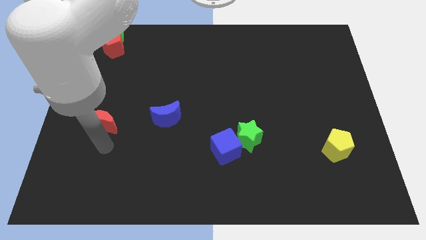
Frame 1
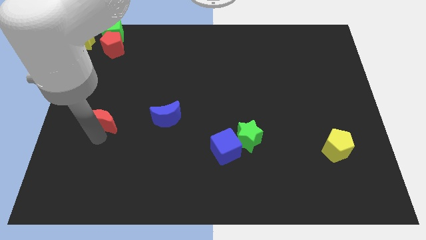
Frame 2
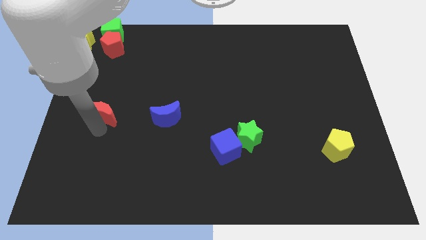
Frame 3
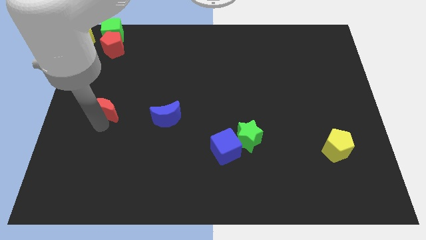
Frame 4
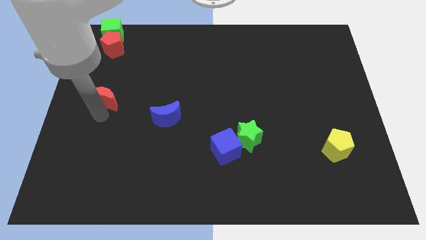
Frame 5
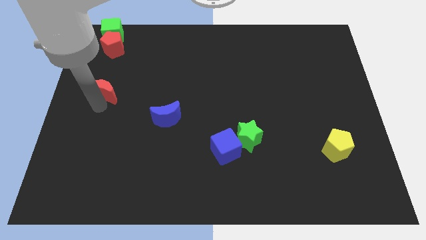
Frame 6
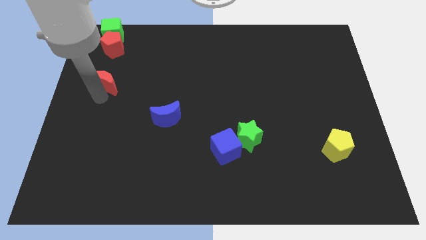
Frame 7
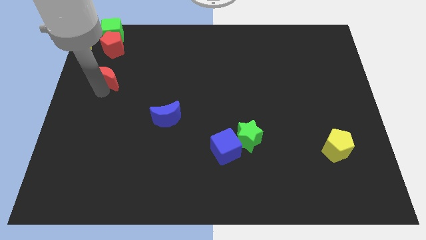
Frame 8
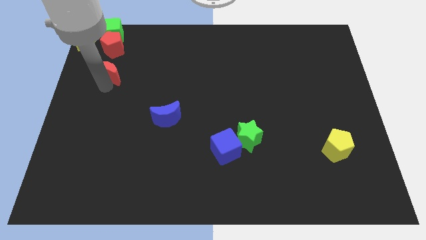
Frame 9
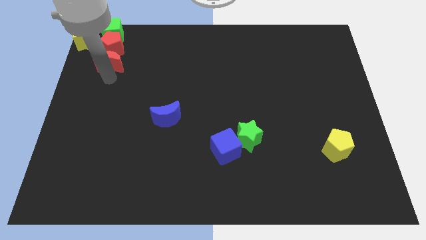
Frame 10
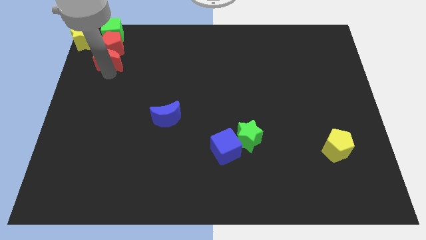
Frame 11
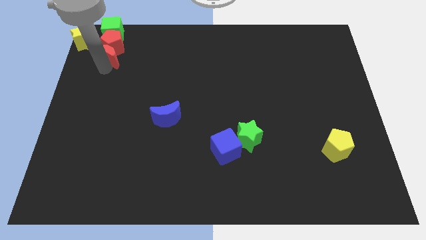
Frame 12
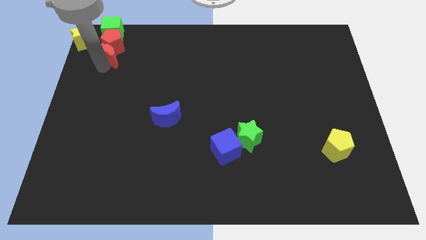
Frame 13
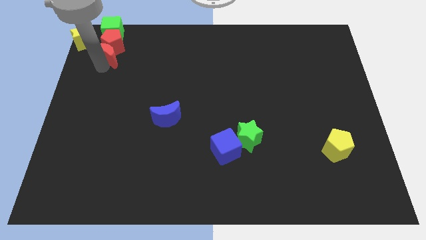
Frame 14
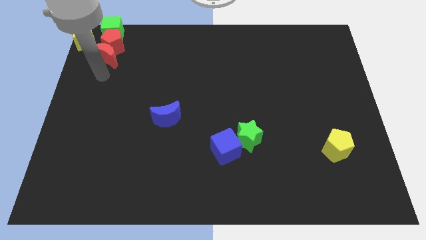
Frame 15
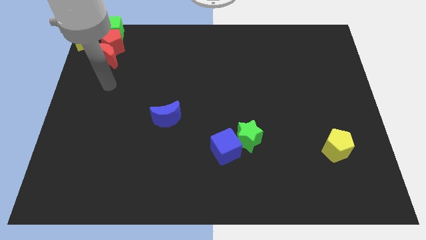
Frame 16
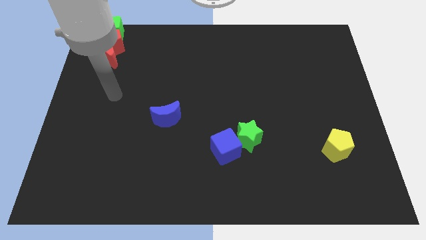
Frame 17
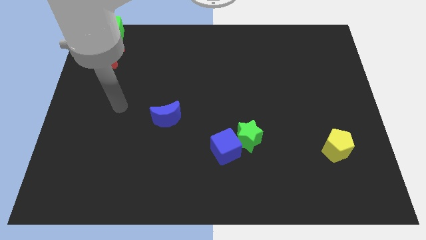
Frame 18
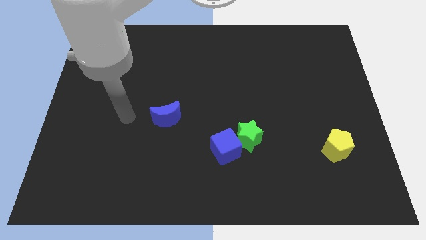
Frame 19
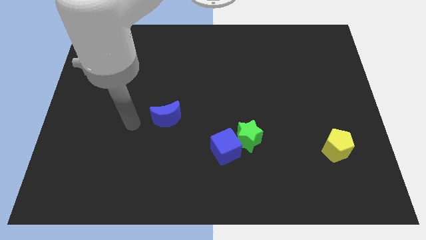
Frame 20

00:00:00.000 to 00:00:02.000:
push the red crescent into the red pentagon

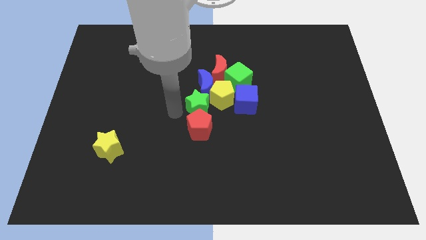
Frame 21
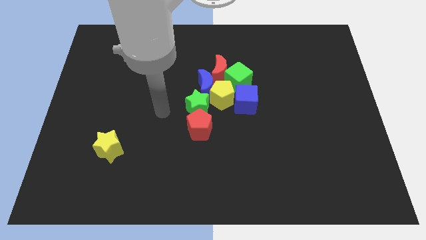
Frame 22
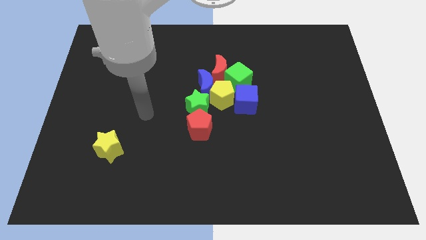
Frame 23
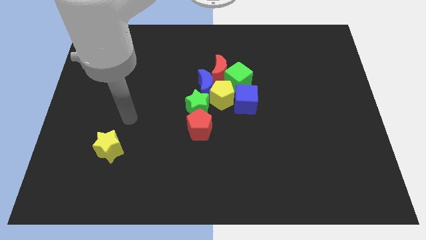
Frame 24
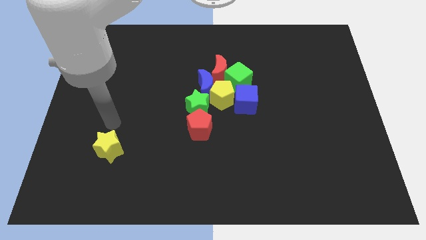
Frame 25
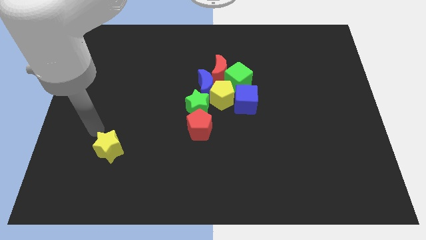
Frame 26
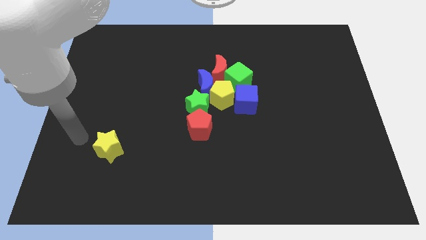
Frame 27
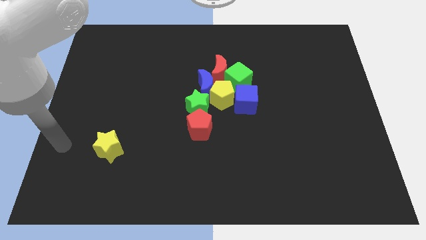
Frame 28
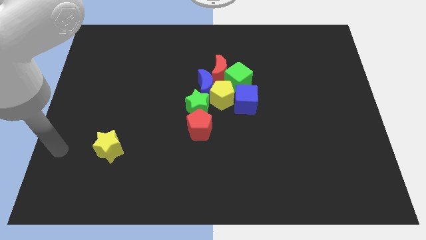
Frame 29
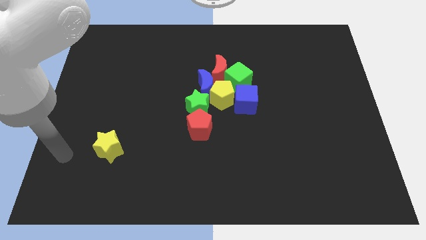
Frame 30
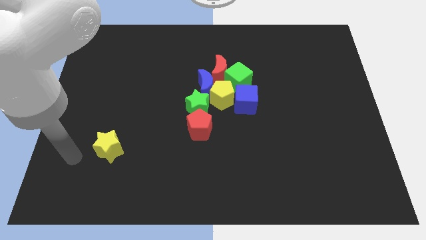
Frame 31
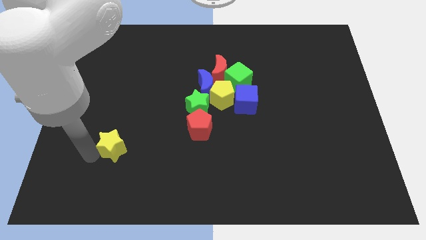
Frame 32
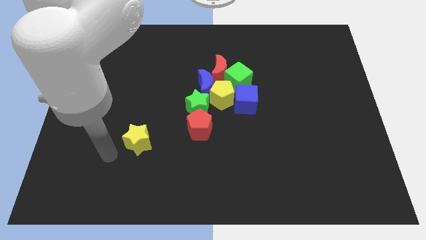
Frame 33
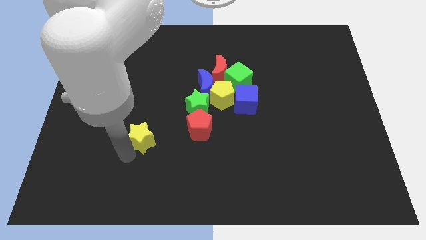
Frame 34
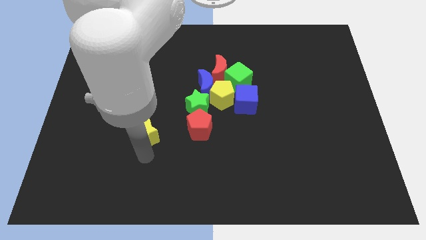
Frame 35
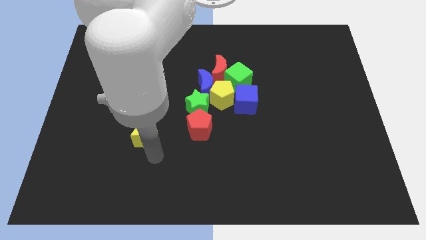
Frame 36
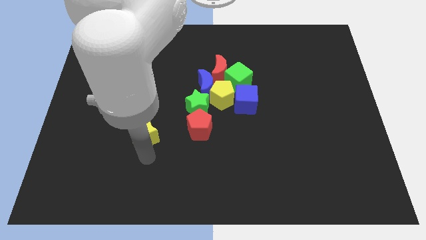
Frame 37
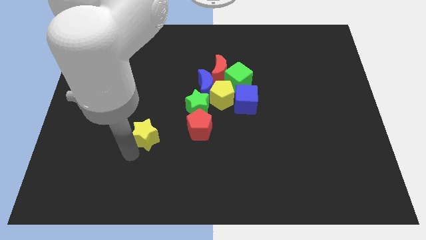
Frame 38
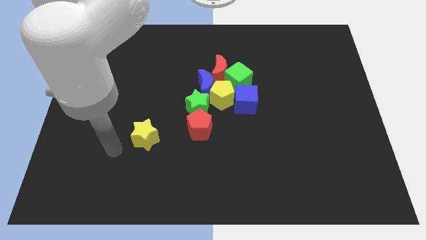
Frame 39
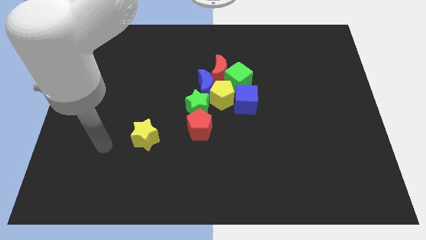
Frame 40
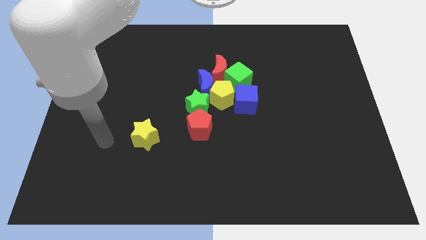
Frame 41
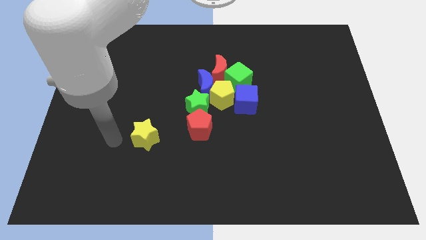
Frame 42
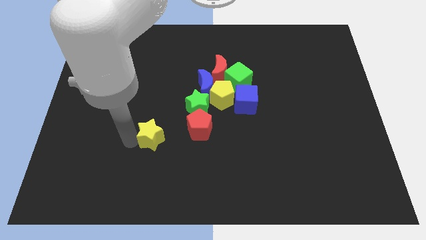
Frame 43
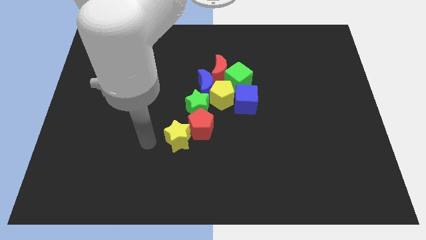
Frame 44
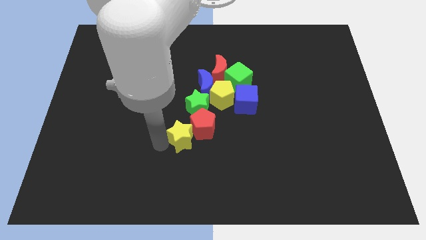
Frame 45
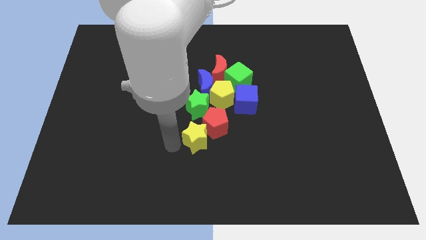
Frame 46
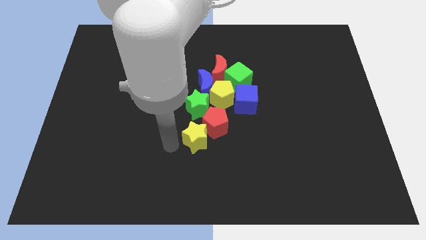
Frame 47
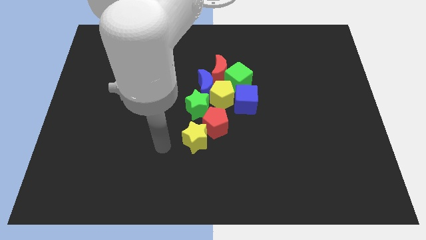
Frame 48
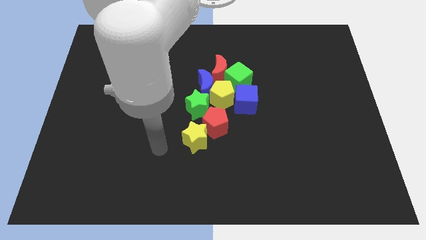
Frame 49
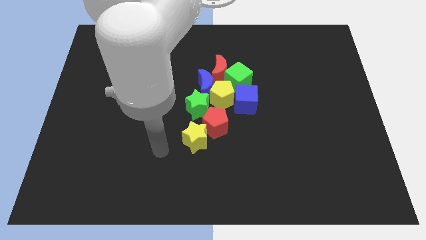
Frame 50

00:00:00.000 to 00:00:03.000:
push the yellow star into the red pentagon

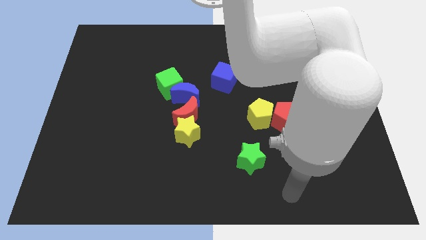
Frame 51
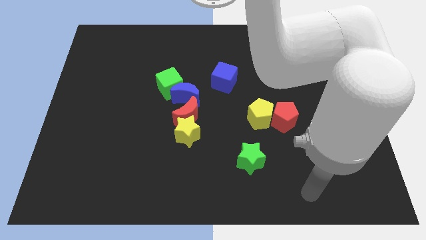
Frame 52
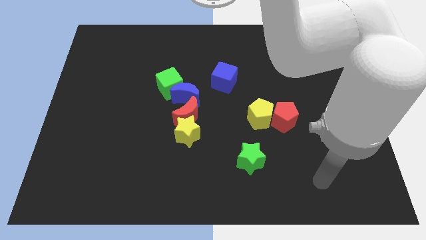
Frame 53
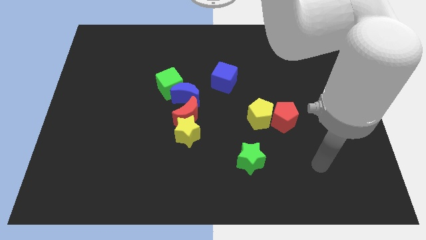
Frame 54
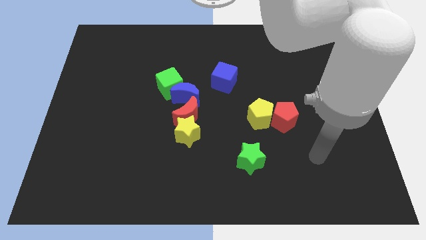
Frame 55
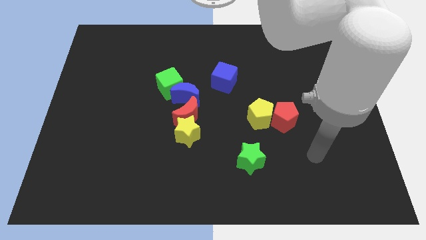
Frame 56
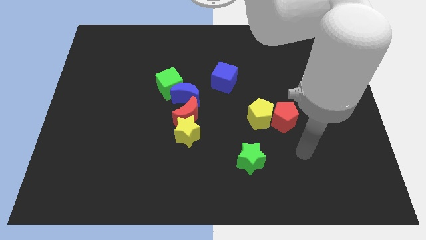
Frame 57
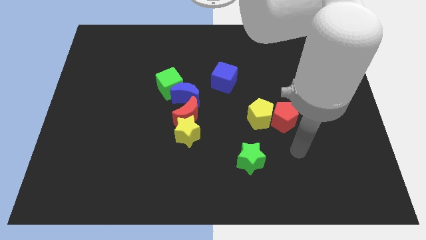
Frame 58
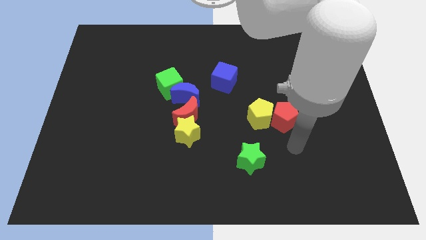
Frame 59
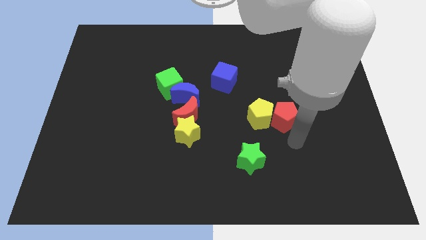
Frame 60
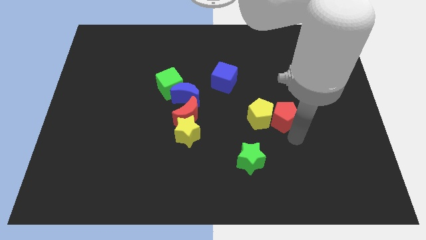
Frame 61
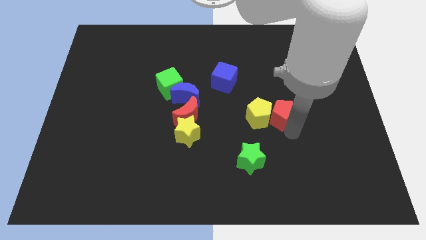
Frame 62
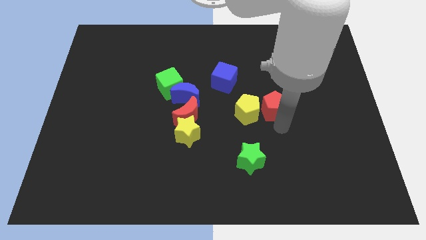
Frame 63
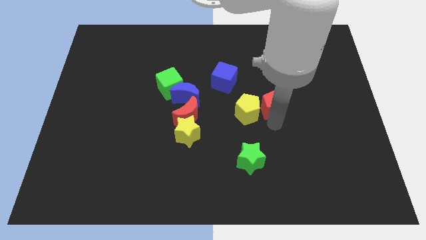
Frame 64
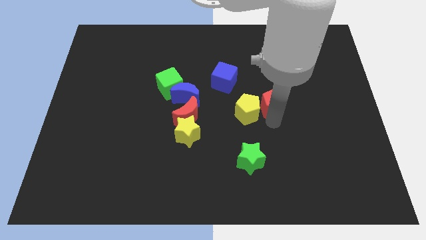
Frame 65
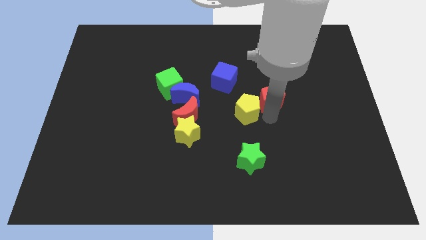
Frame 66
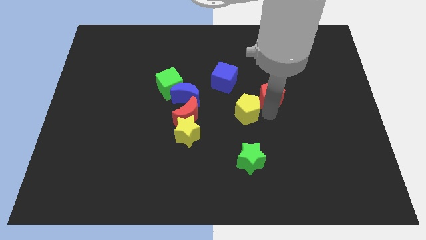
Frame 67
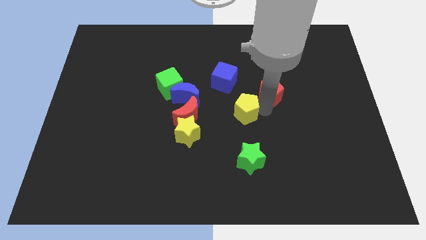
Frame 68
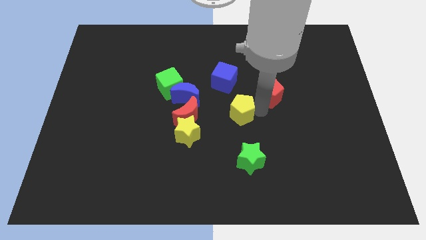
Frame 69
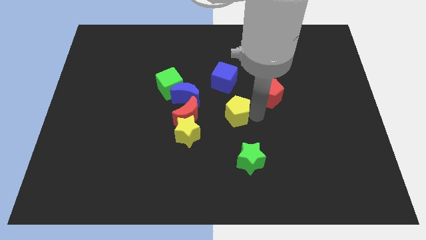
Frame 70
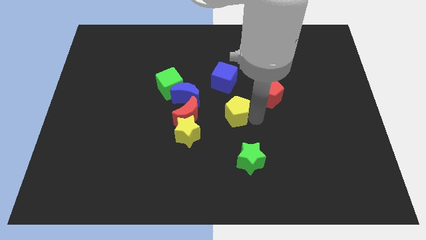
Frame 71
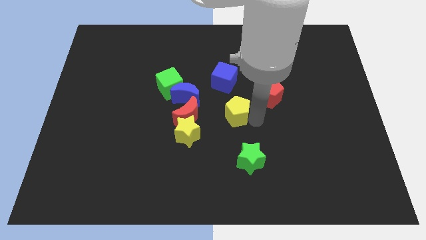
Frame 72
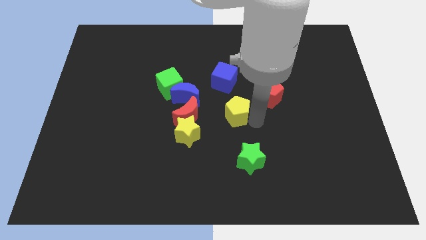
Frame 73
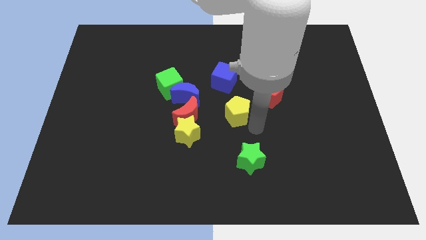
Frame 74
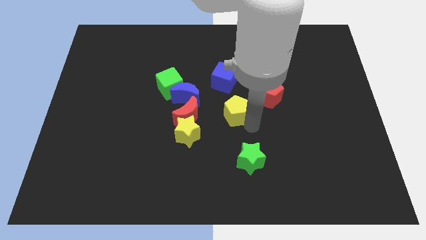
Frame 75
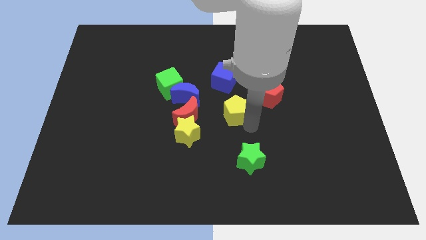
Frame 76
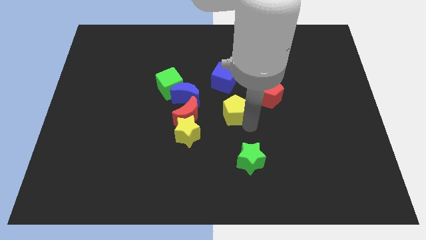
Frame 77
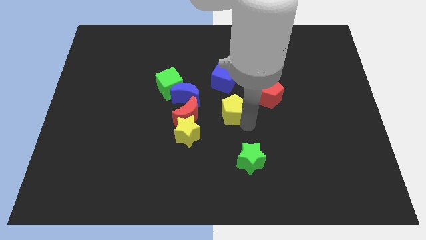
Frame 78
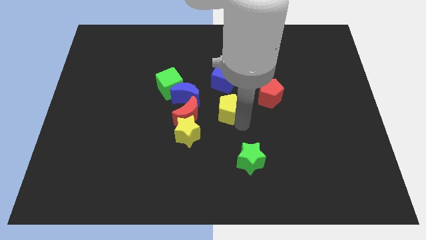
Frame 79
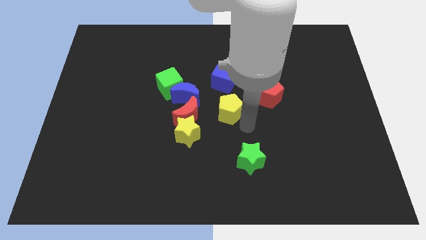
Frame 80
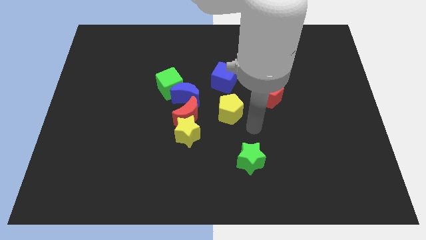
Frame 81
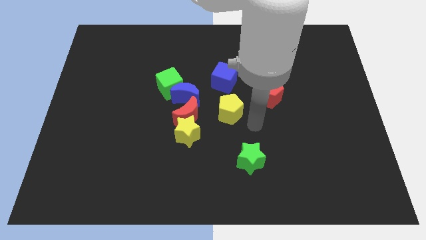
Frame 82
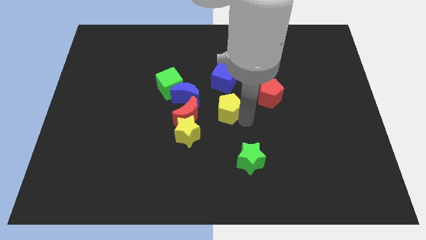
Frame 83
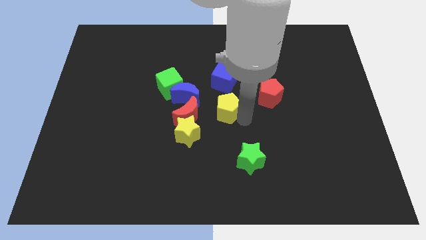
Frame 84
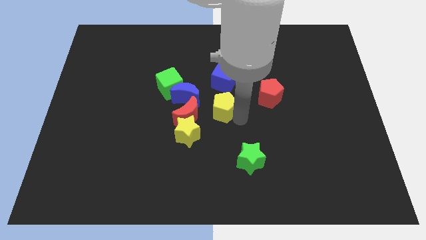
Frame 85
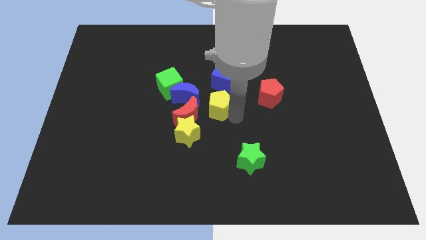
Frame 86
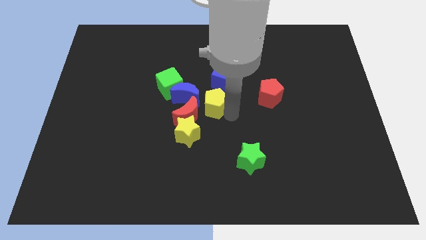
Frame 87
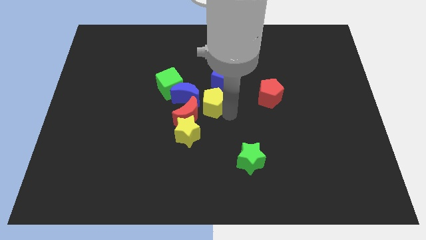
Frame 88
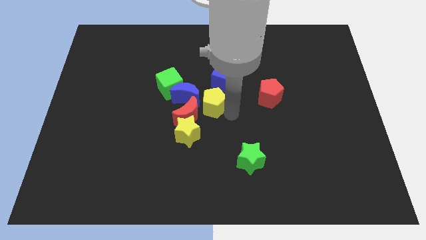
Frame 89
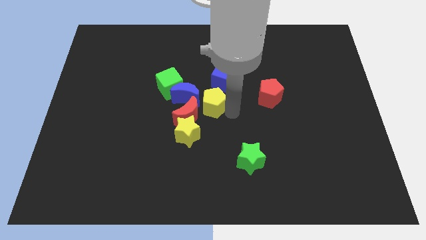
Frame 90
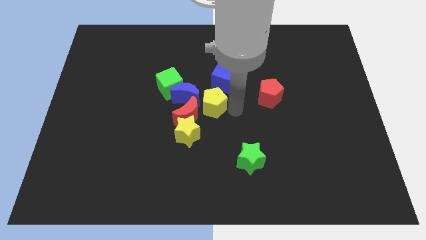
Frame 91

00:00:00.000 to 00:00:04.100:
separate red and yellow pentagons from each other
